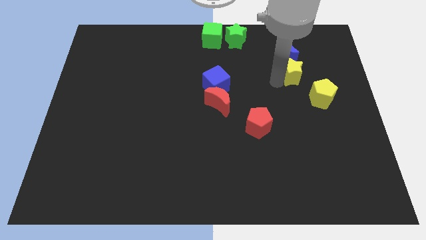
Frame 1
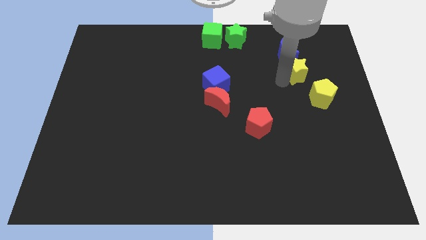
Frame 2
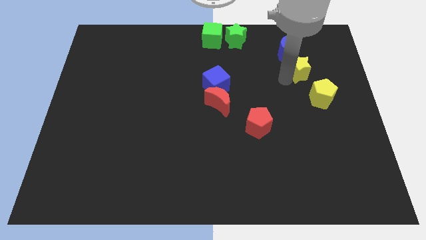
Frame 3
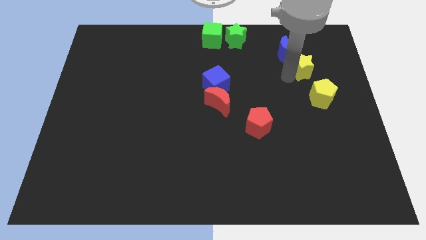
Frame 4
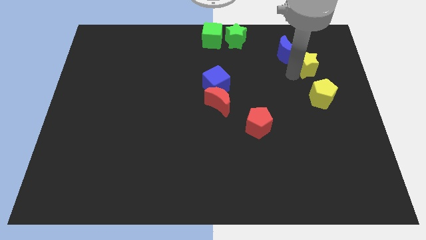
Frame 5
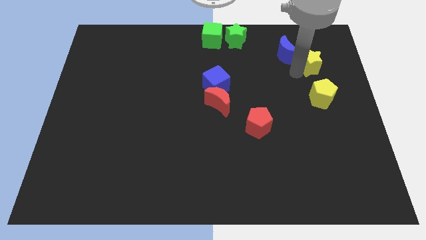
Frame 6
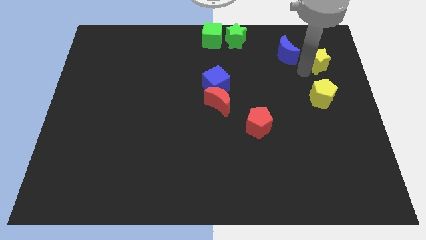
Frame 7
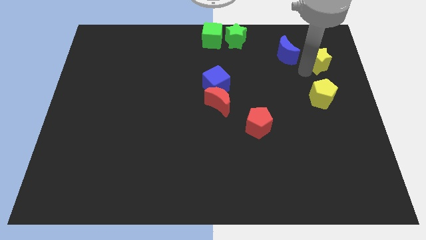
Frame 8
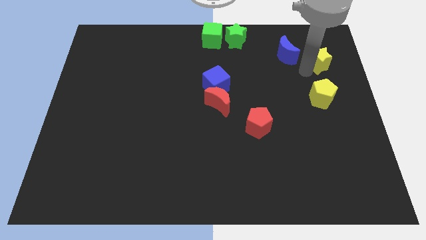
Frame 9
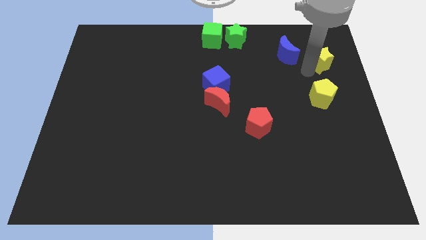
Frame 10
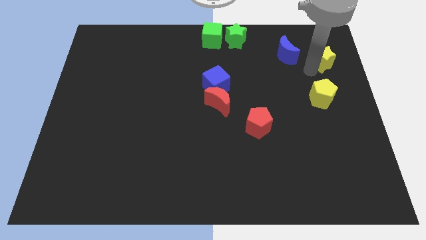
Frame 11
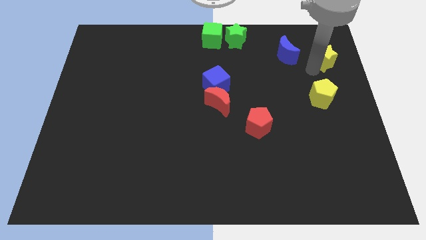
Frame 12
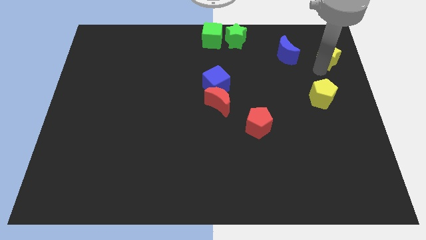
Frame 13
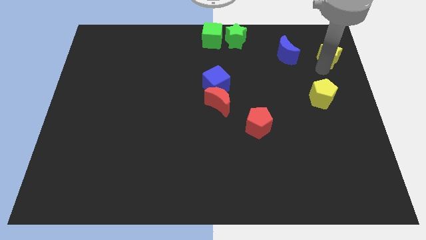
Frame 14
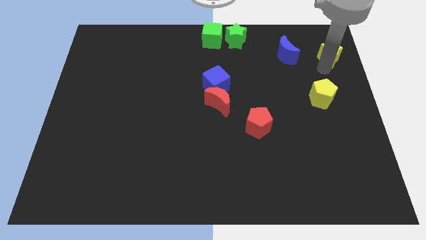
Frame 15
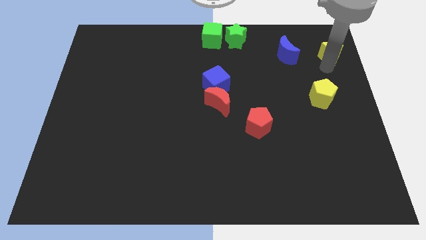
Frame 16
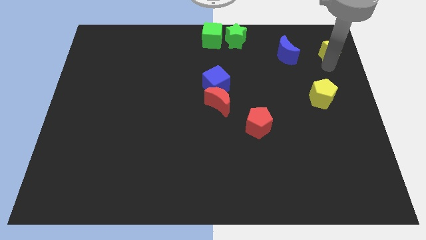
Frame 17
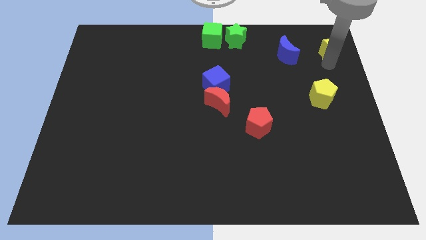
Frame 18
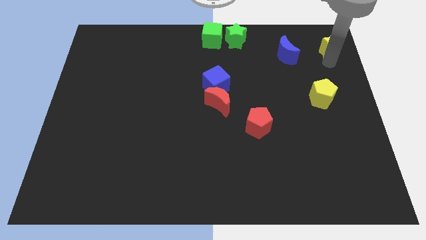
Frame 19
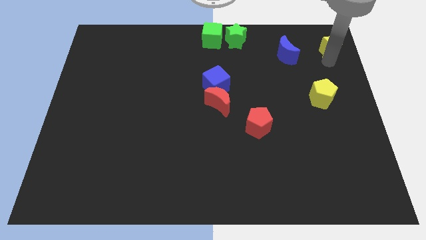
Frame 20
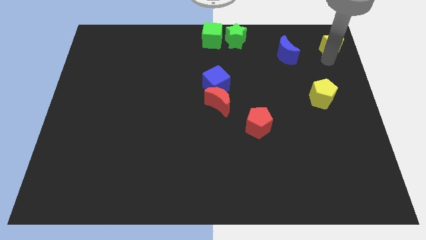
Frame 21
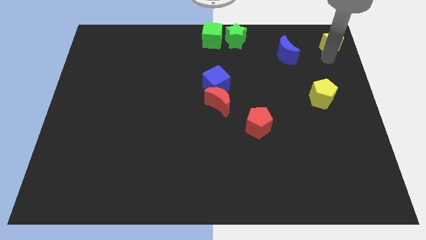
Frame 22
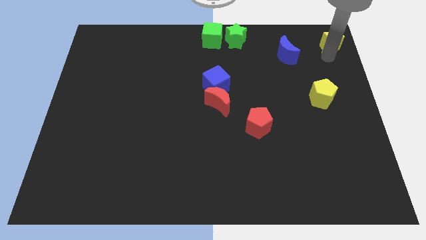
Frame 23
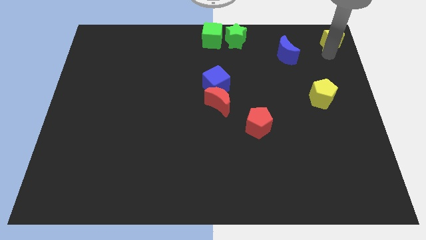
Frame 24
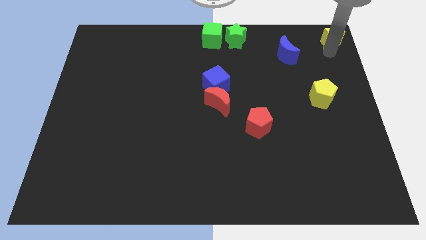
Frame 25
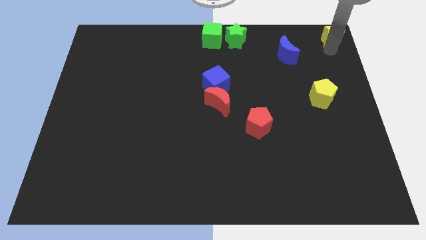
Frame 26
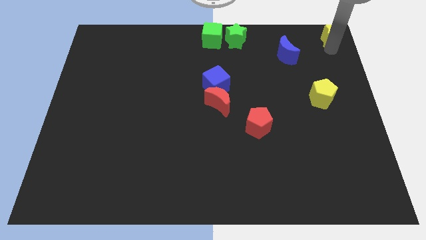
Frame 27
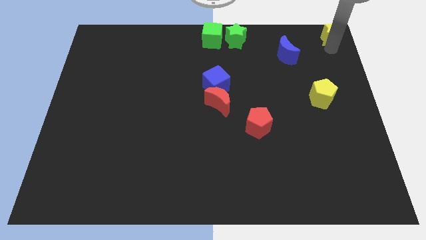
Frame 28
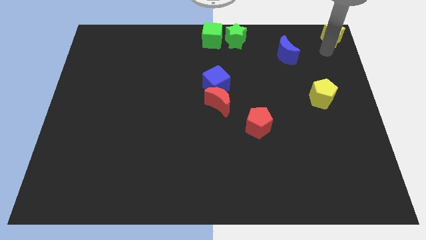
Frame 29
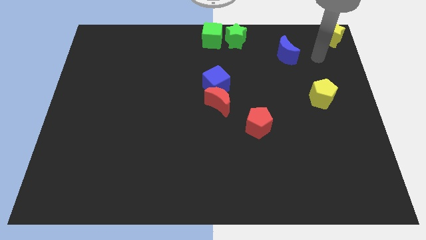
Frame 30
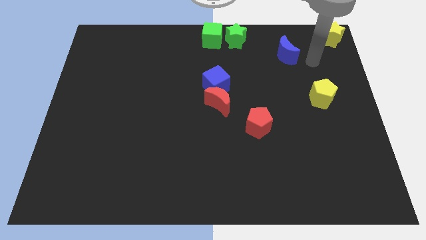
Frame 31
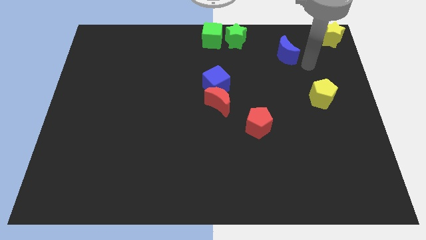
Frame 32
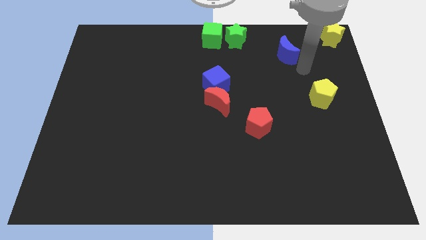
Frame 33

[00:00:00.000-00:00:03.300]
slide yellow star towards top right corner of the board

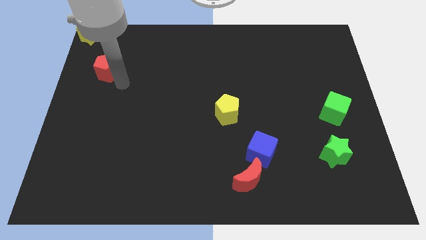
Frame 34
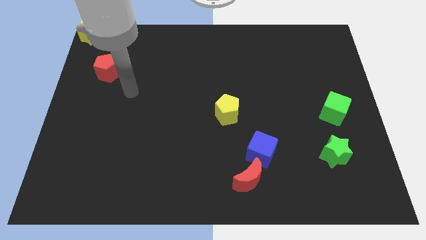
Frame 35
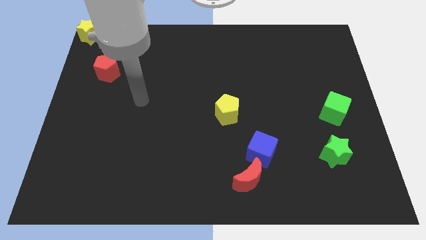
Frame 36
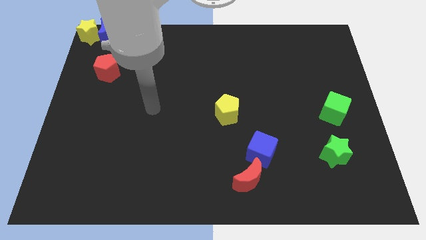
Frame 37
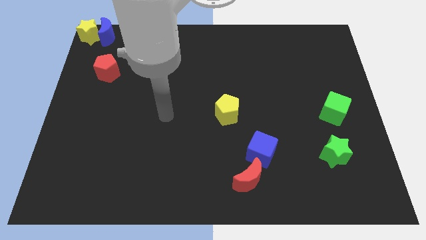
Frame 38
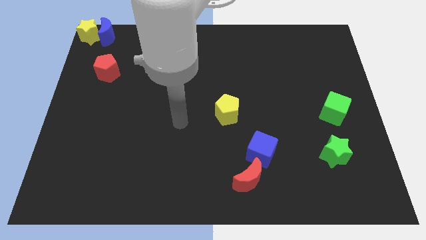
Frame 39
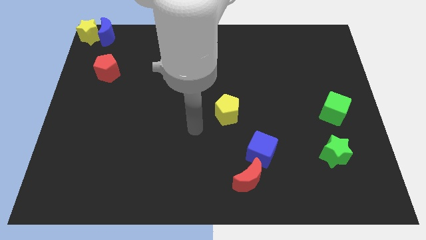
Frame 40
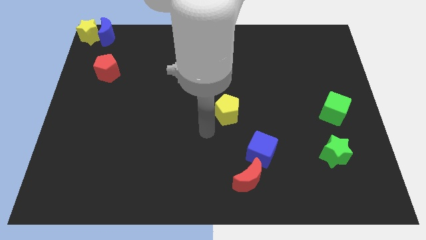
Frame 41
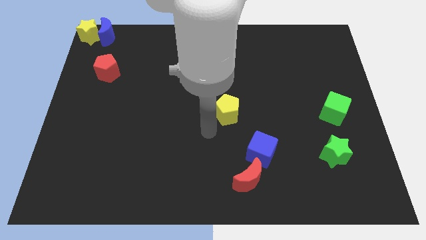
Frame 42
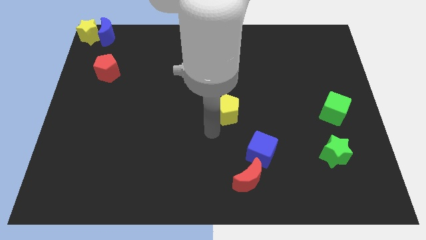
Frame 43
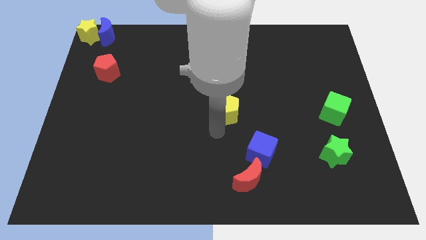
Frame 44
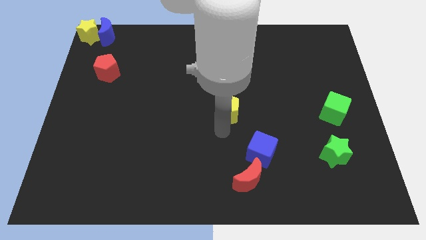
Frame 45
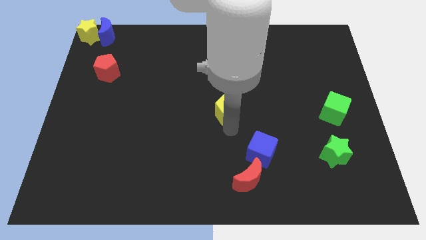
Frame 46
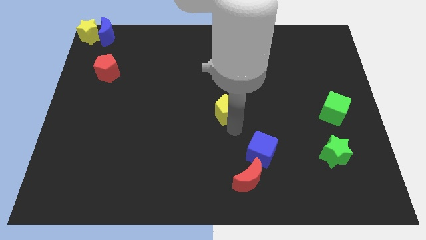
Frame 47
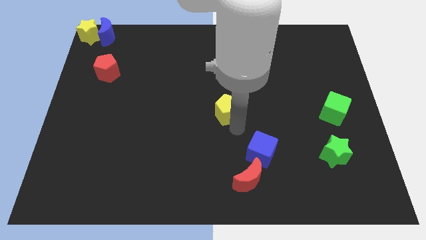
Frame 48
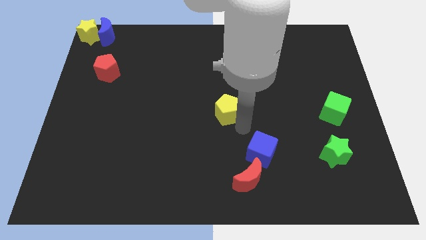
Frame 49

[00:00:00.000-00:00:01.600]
place the arm diagonally to the yellow pentagon

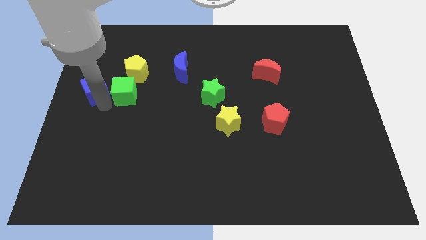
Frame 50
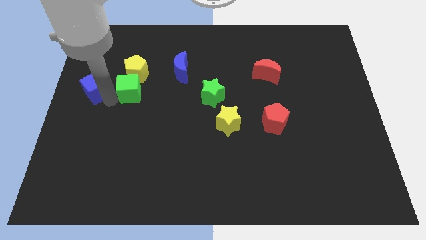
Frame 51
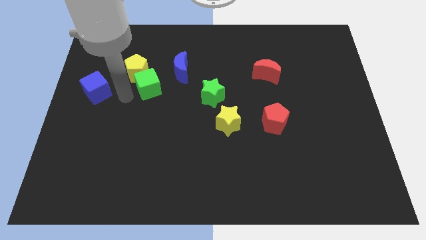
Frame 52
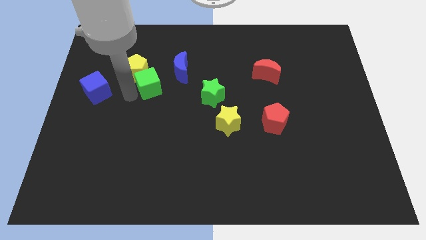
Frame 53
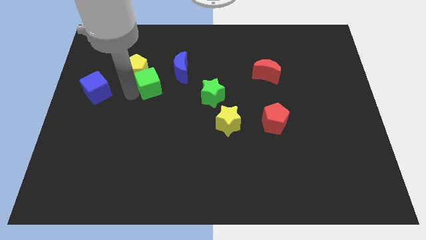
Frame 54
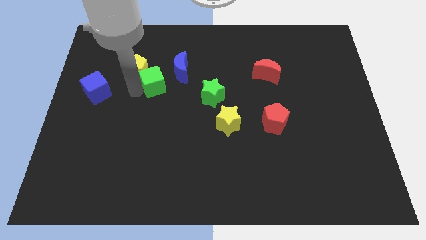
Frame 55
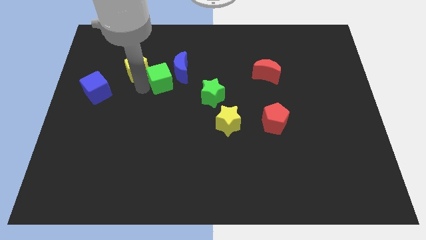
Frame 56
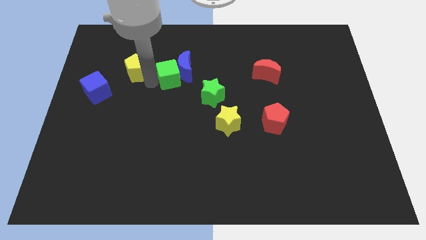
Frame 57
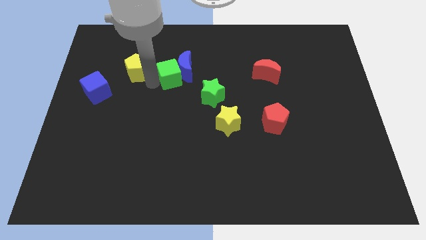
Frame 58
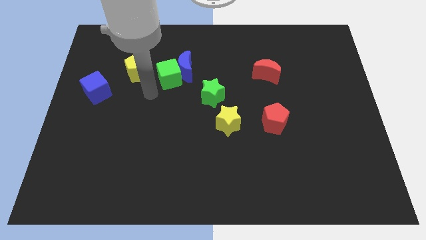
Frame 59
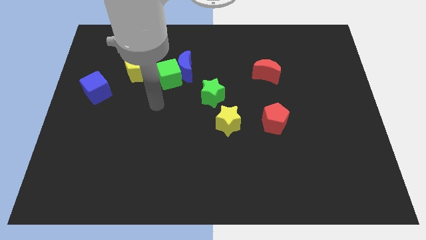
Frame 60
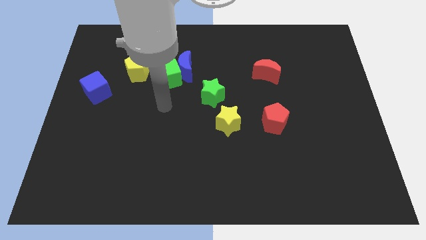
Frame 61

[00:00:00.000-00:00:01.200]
push the green cube into the blue crescent

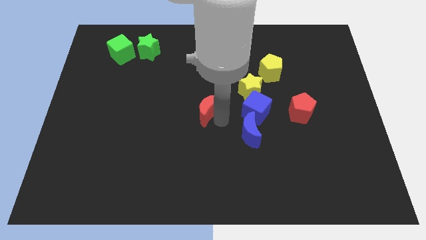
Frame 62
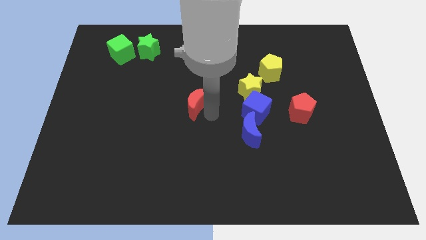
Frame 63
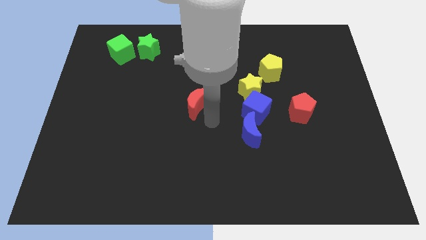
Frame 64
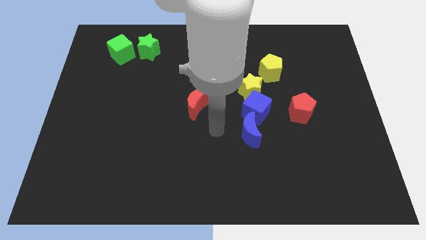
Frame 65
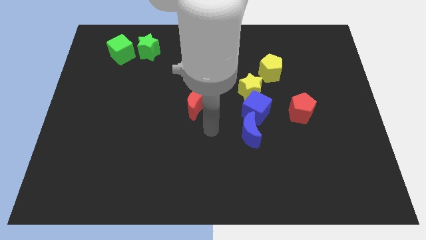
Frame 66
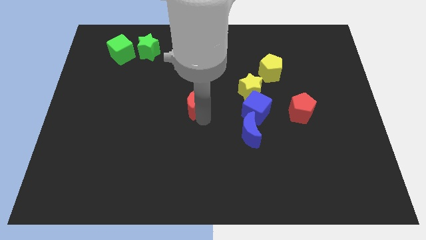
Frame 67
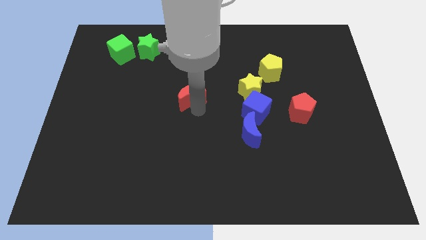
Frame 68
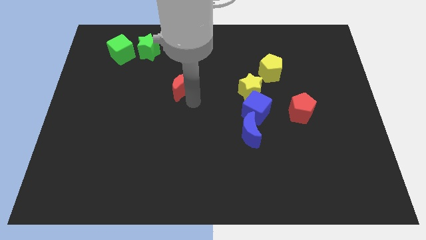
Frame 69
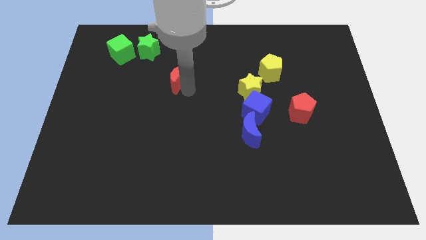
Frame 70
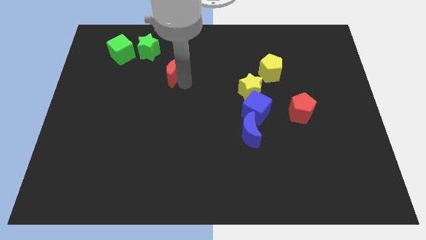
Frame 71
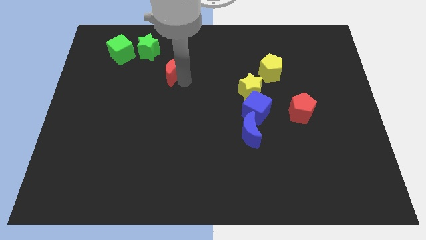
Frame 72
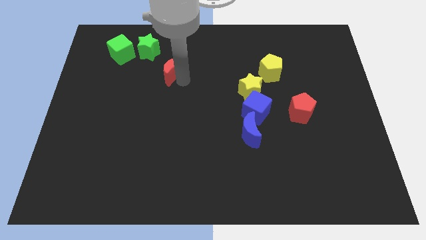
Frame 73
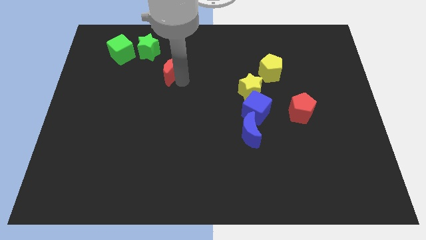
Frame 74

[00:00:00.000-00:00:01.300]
drag the red moon to the bottom right side of the green star

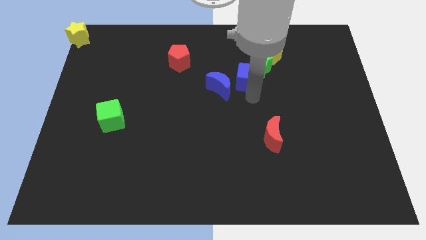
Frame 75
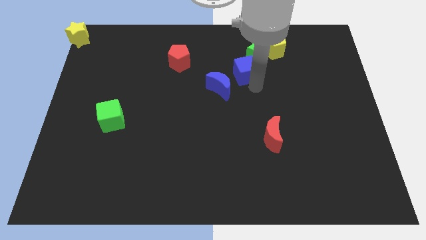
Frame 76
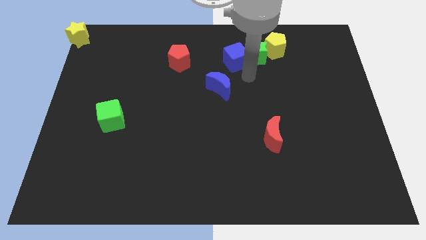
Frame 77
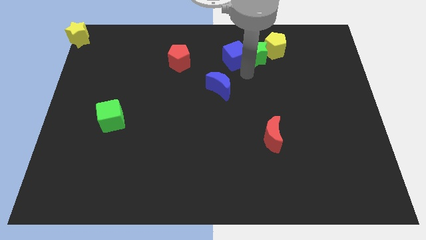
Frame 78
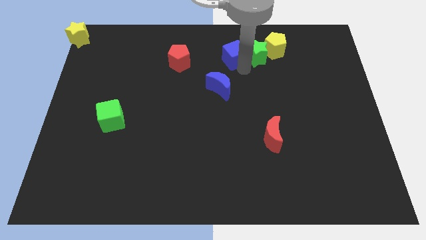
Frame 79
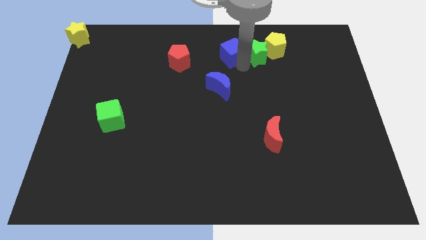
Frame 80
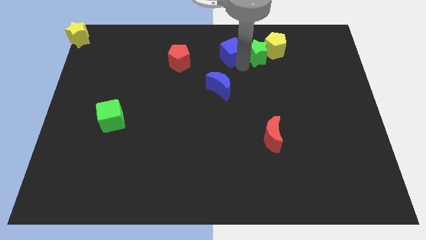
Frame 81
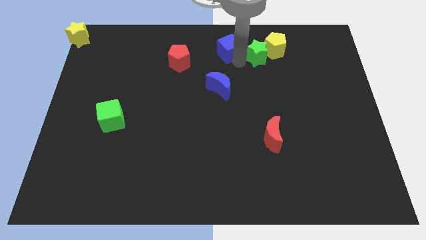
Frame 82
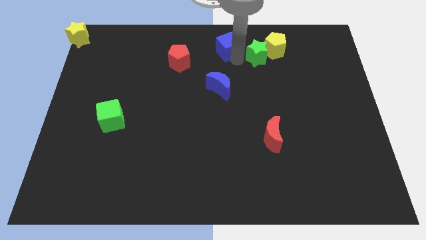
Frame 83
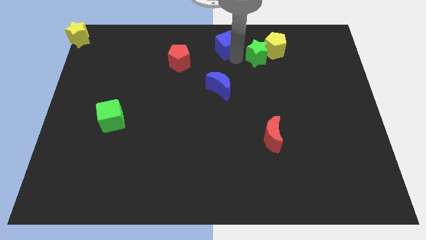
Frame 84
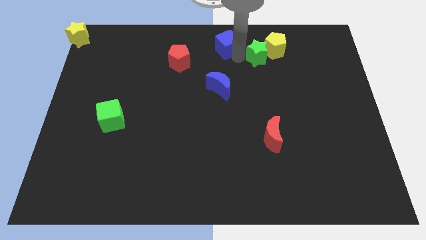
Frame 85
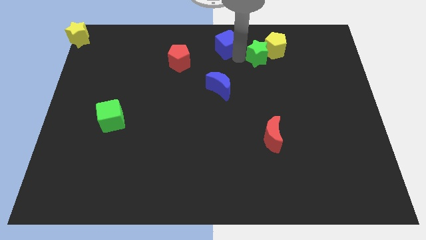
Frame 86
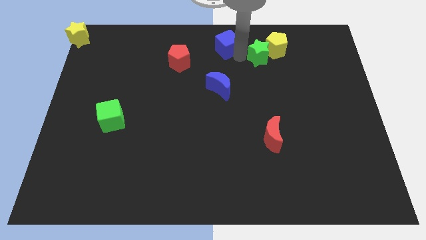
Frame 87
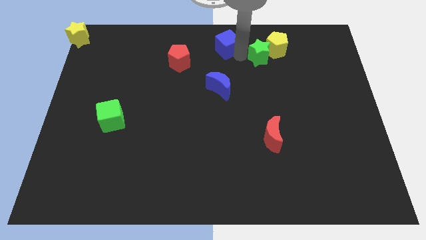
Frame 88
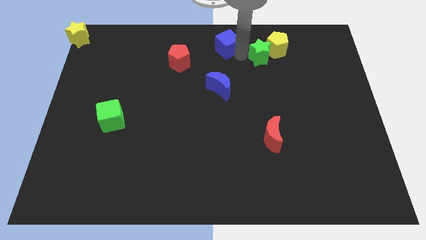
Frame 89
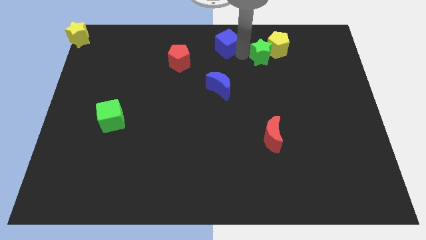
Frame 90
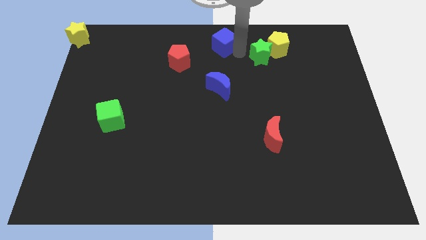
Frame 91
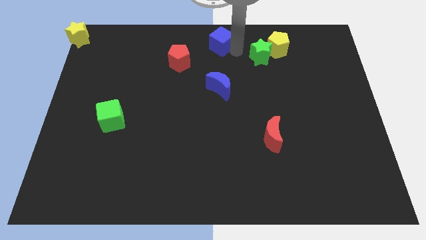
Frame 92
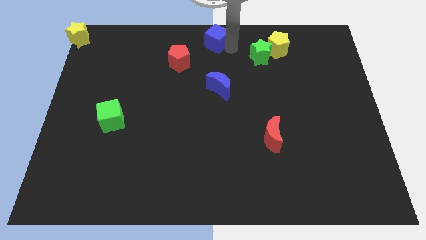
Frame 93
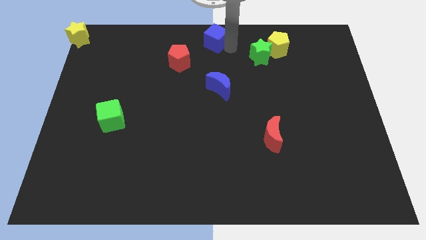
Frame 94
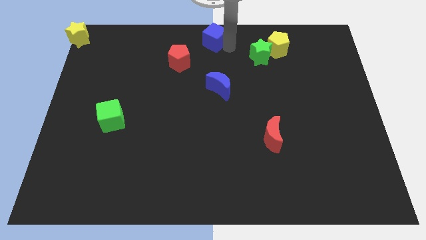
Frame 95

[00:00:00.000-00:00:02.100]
place the blue cube above the blue moon
